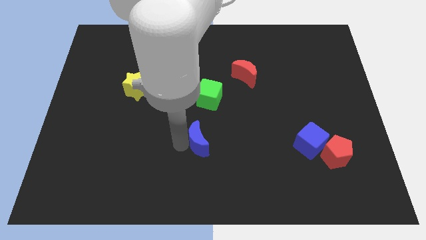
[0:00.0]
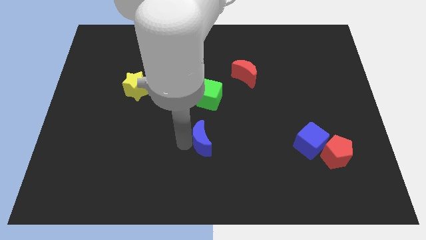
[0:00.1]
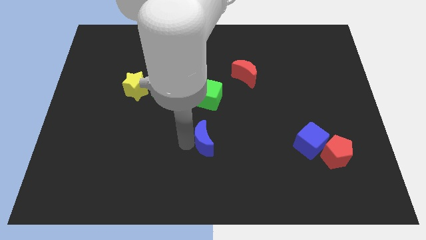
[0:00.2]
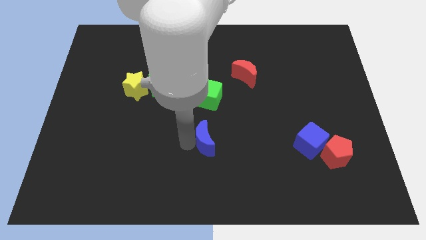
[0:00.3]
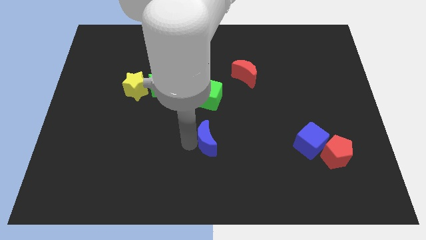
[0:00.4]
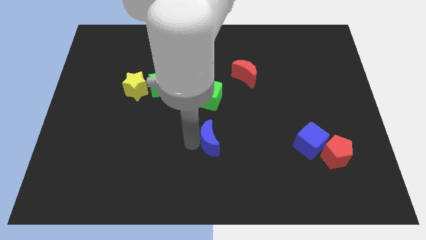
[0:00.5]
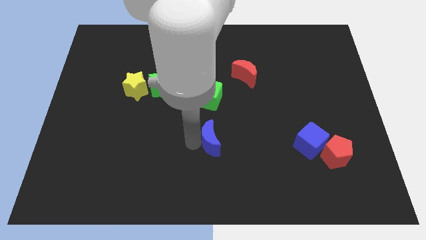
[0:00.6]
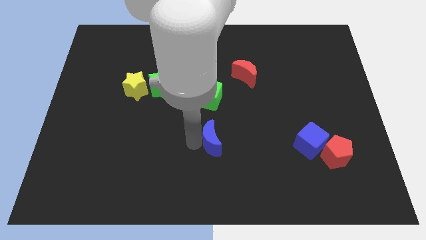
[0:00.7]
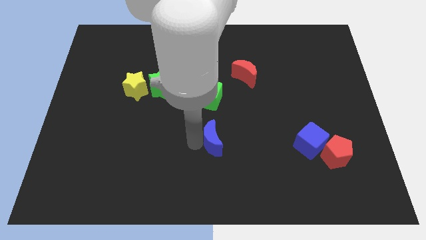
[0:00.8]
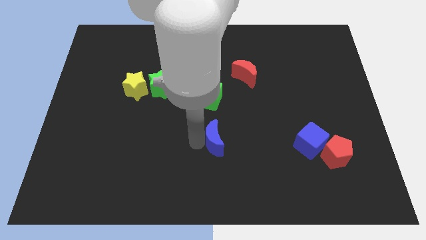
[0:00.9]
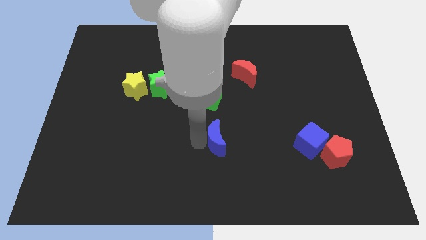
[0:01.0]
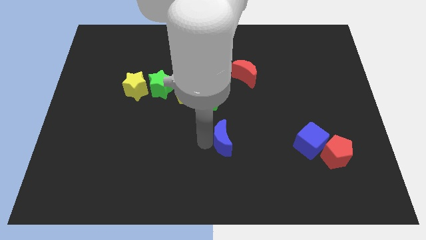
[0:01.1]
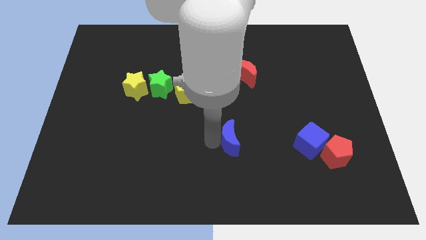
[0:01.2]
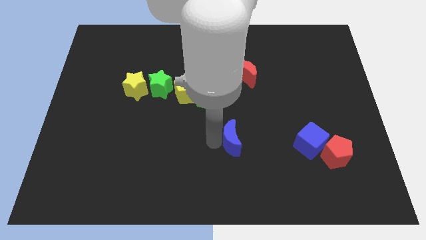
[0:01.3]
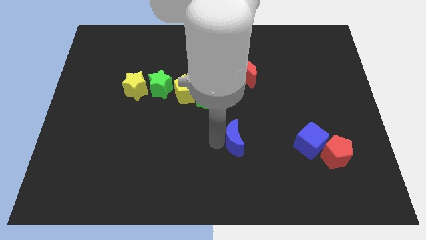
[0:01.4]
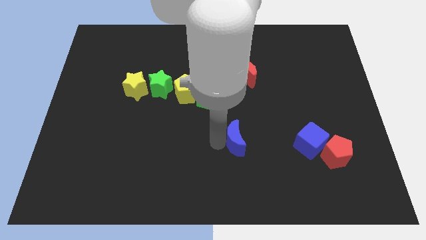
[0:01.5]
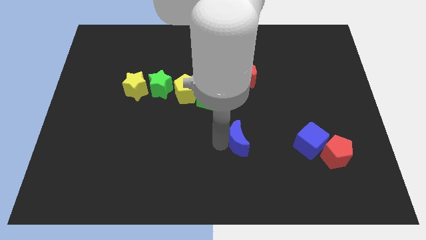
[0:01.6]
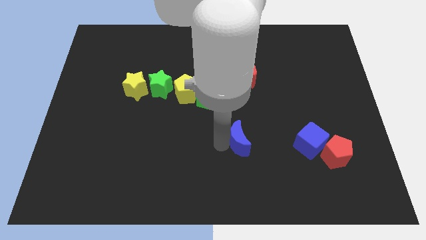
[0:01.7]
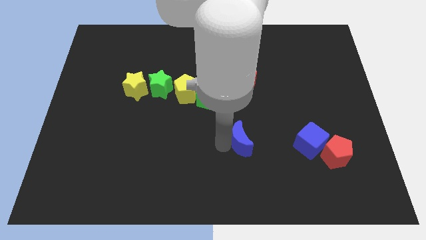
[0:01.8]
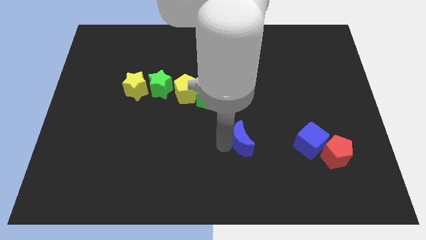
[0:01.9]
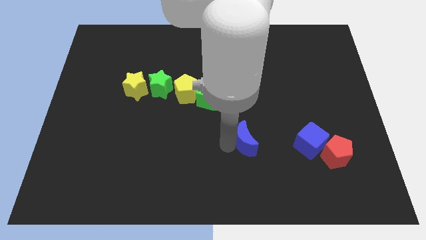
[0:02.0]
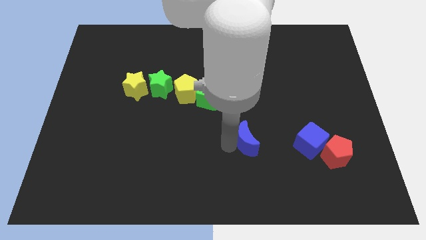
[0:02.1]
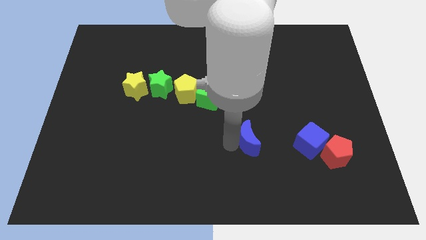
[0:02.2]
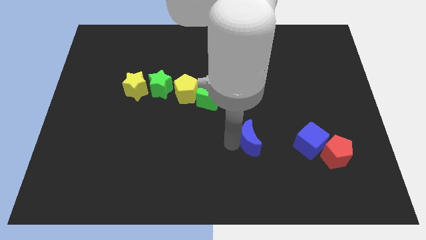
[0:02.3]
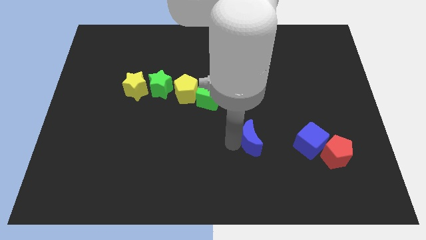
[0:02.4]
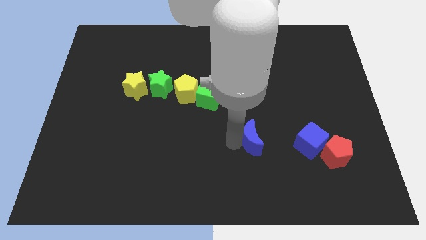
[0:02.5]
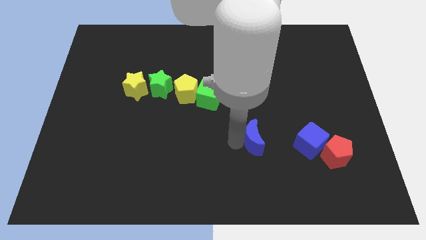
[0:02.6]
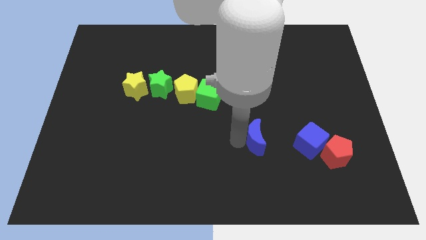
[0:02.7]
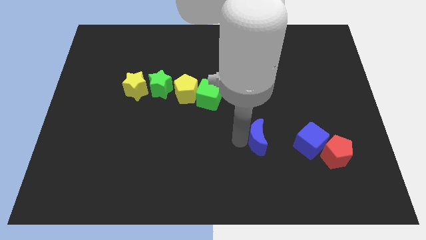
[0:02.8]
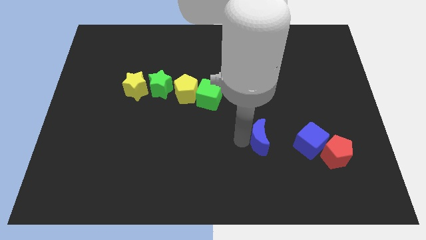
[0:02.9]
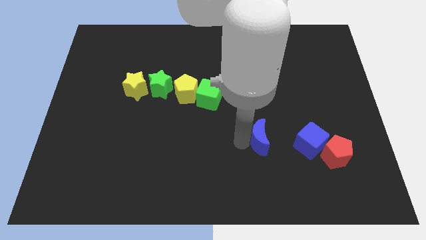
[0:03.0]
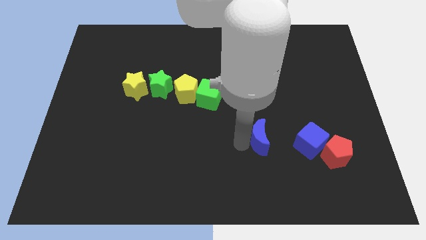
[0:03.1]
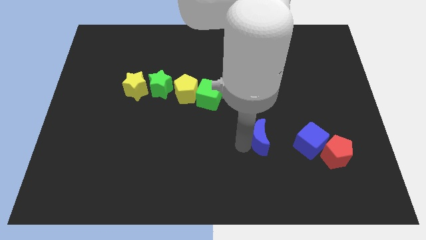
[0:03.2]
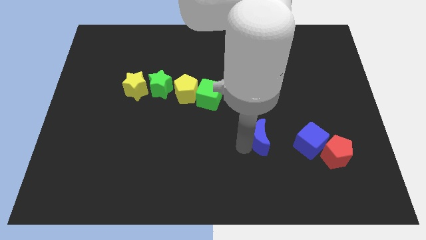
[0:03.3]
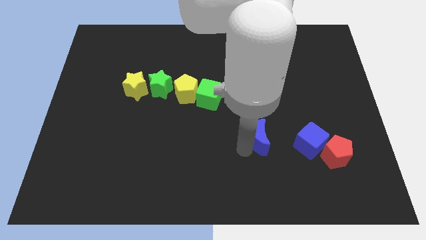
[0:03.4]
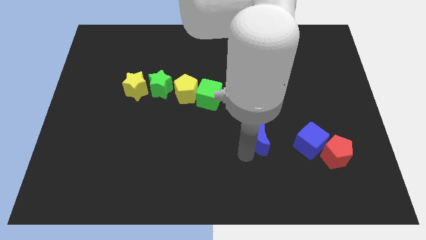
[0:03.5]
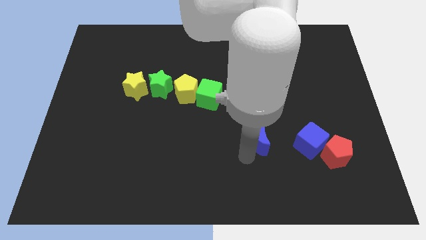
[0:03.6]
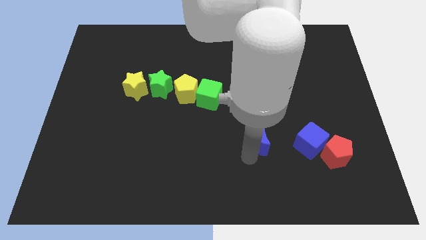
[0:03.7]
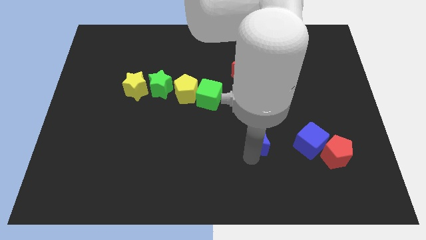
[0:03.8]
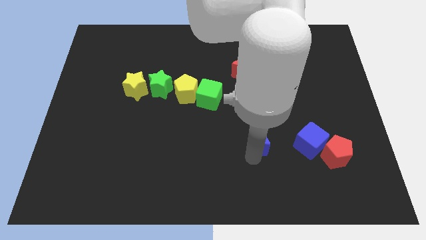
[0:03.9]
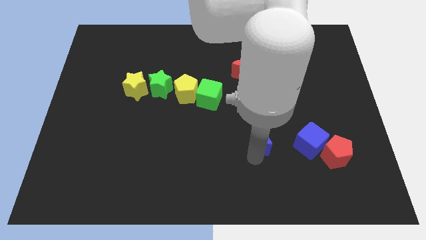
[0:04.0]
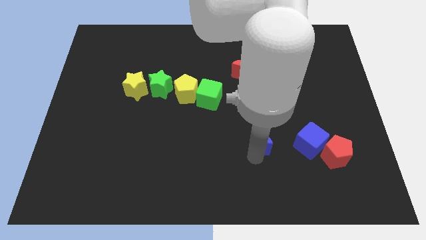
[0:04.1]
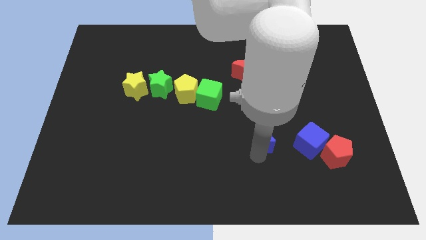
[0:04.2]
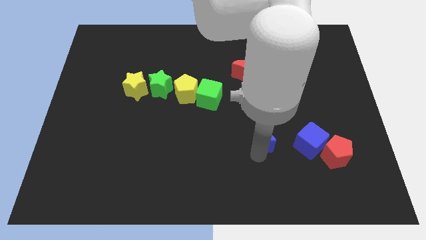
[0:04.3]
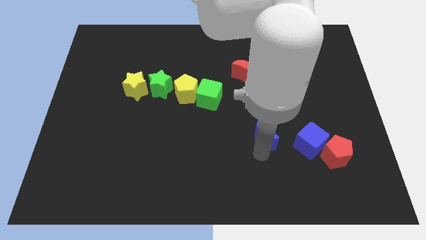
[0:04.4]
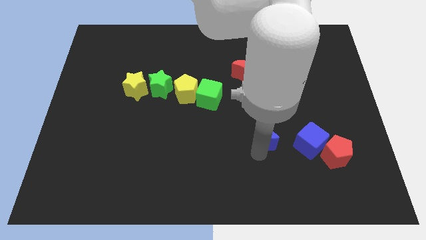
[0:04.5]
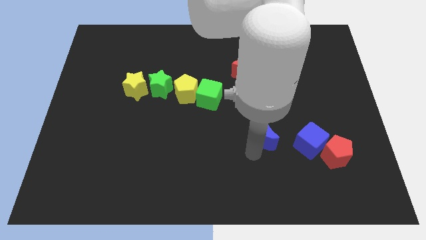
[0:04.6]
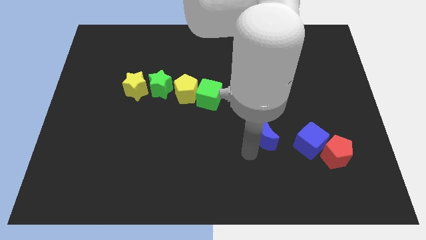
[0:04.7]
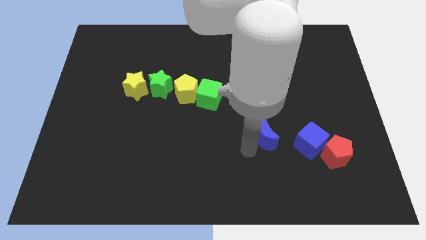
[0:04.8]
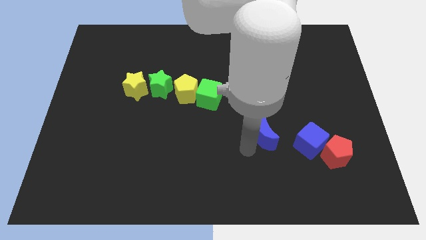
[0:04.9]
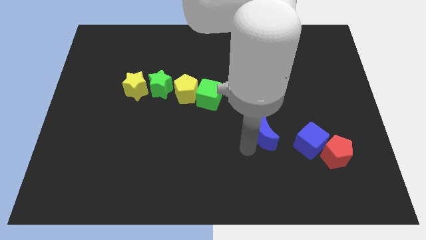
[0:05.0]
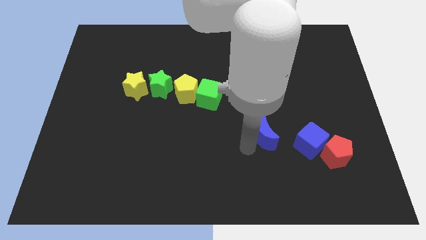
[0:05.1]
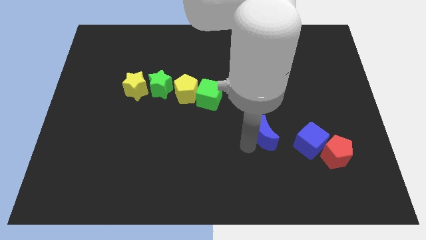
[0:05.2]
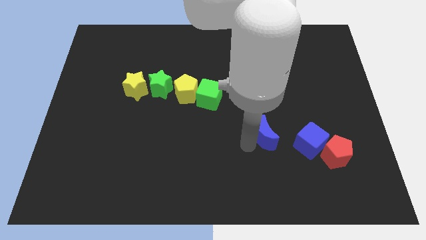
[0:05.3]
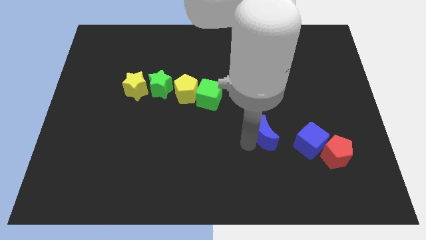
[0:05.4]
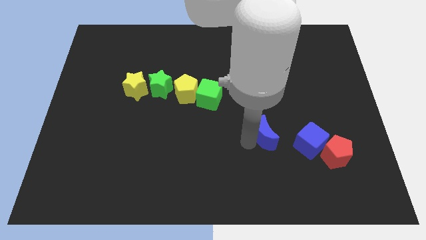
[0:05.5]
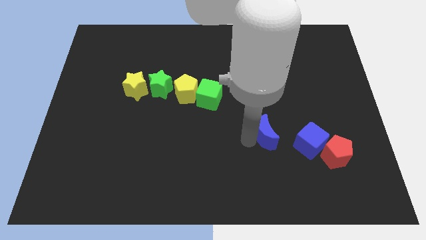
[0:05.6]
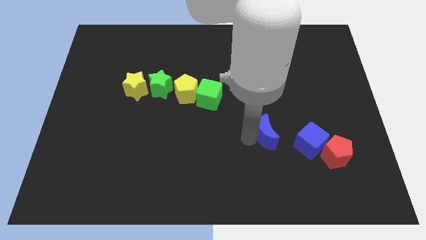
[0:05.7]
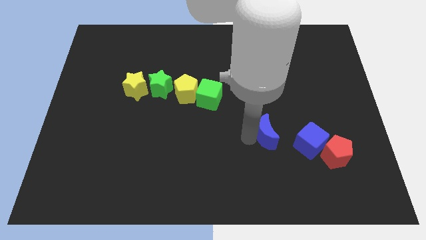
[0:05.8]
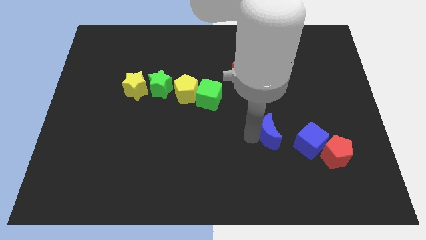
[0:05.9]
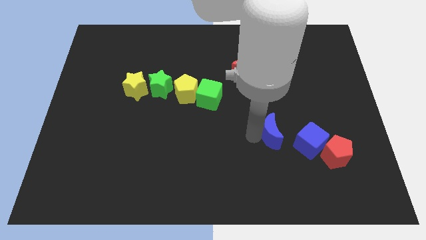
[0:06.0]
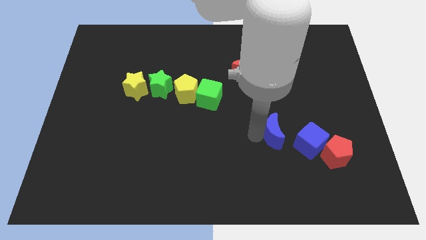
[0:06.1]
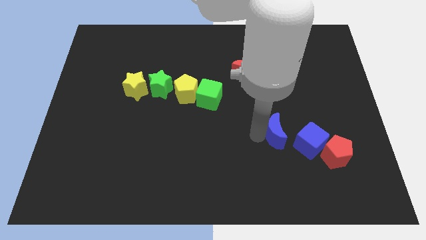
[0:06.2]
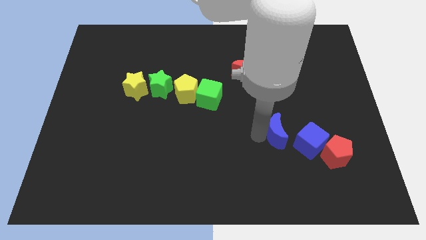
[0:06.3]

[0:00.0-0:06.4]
slide the blue crescent towards the blue cube

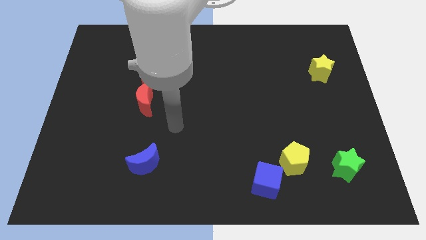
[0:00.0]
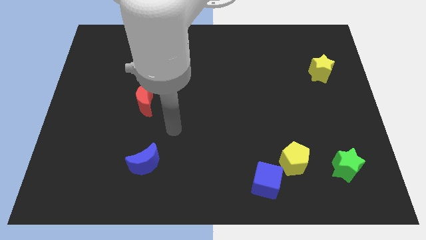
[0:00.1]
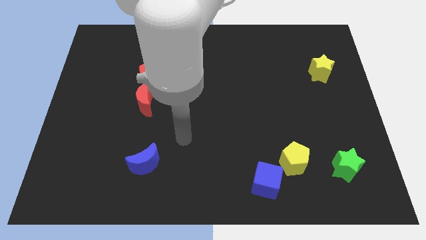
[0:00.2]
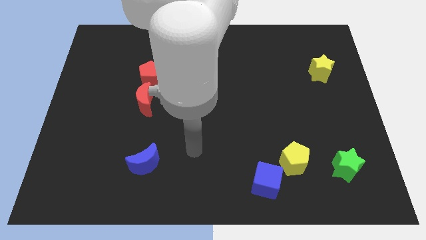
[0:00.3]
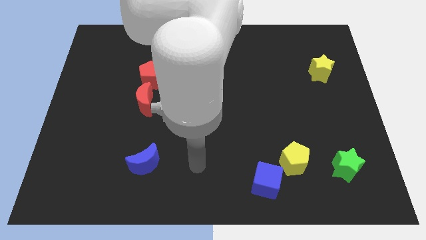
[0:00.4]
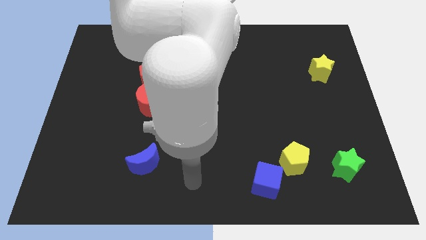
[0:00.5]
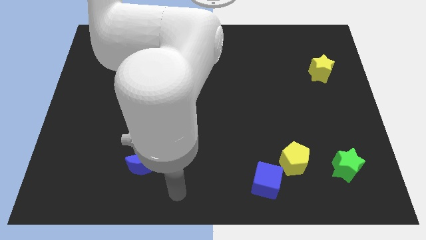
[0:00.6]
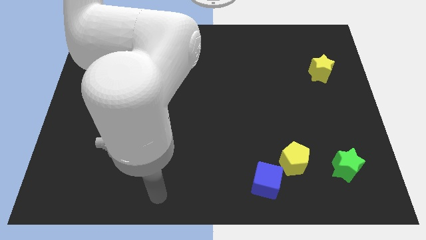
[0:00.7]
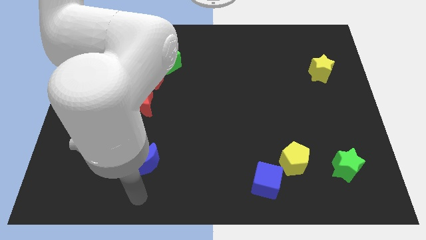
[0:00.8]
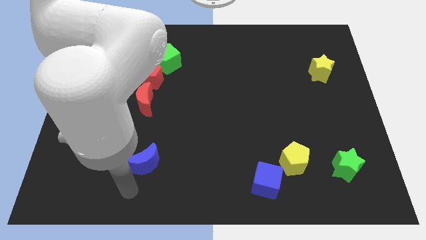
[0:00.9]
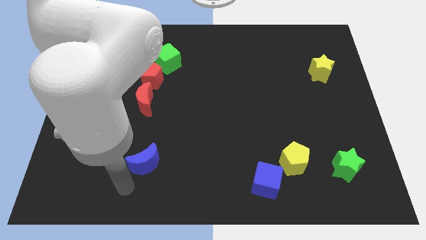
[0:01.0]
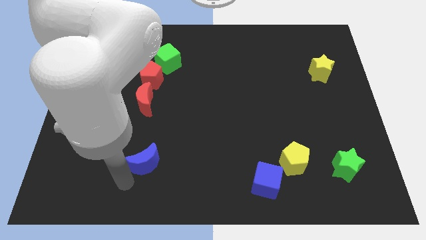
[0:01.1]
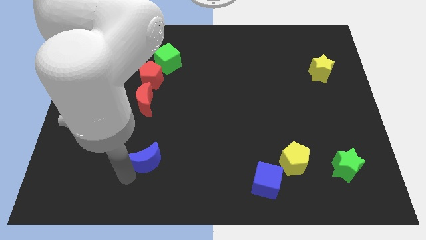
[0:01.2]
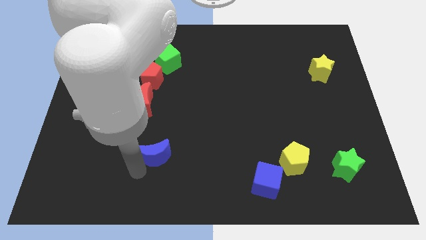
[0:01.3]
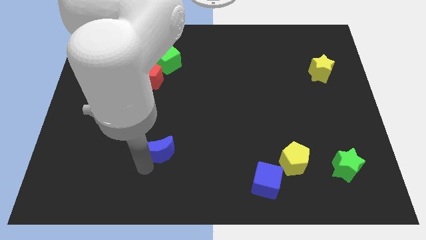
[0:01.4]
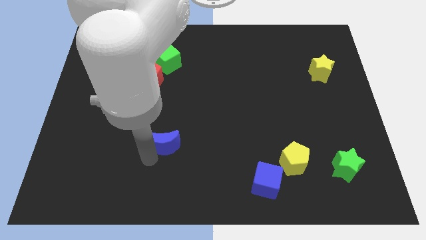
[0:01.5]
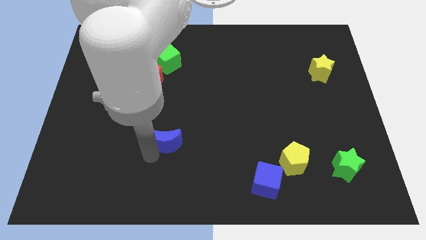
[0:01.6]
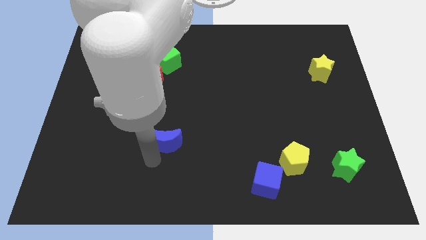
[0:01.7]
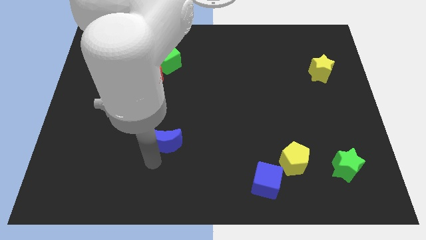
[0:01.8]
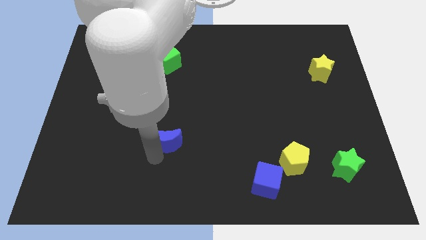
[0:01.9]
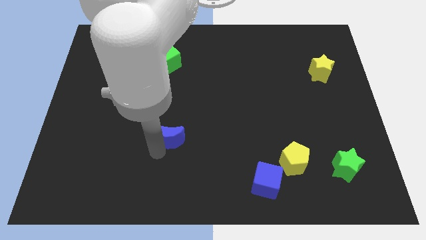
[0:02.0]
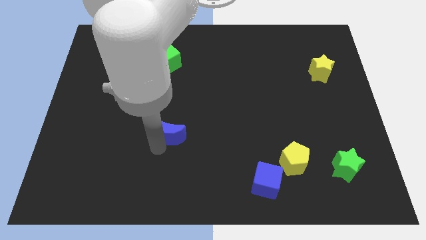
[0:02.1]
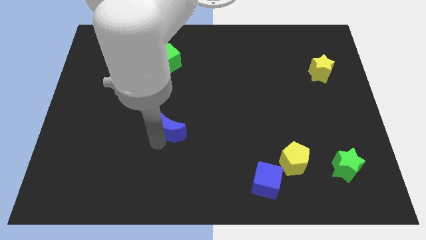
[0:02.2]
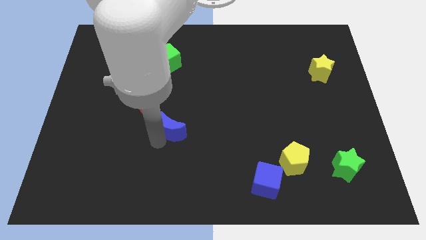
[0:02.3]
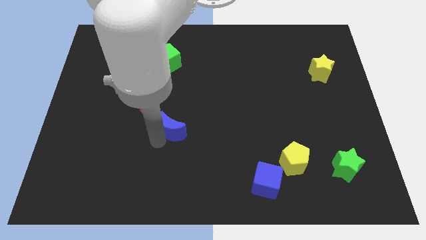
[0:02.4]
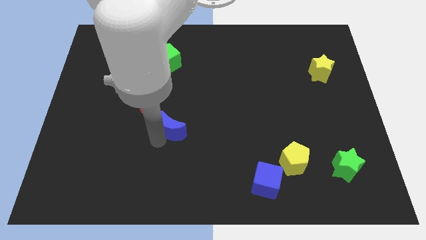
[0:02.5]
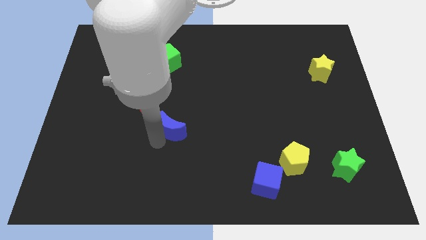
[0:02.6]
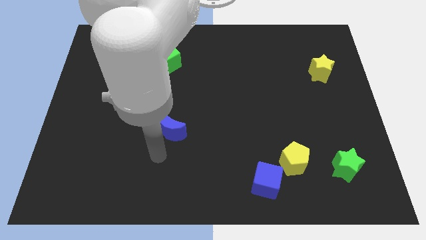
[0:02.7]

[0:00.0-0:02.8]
push blue crescent towards red crescent
